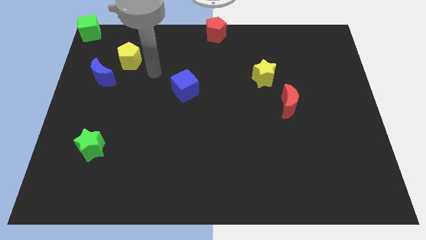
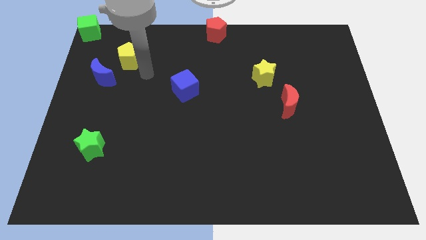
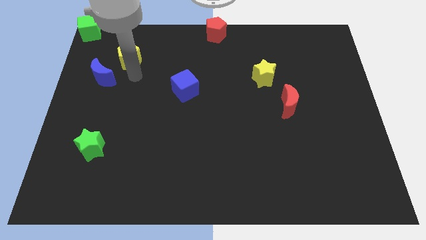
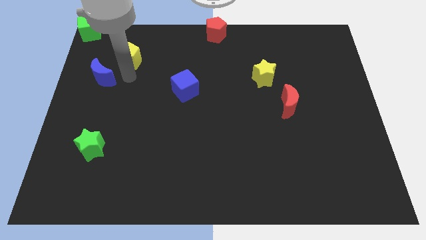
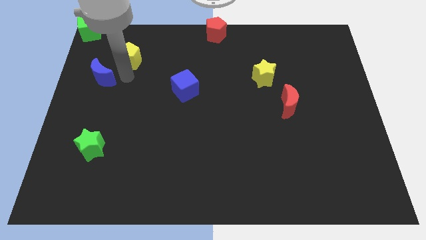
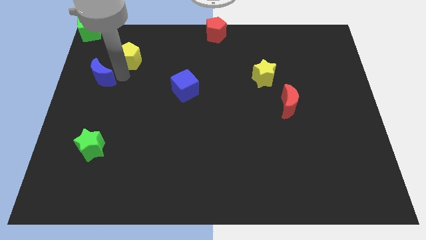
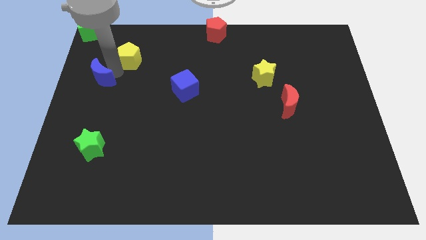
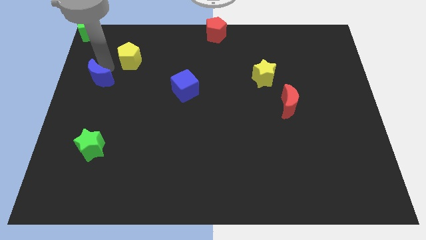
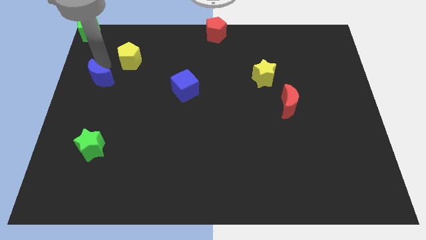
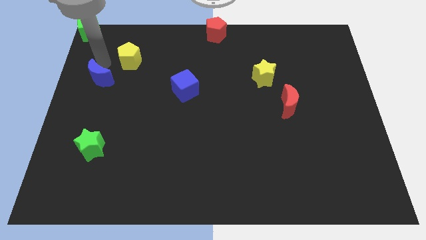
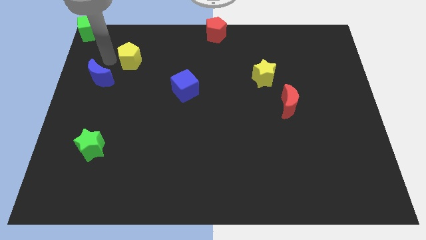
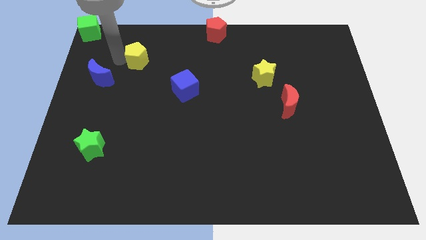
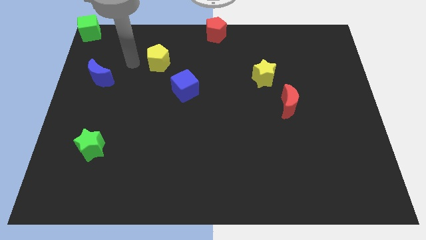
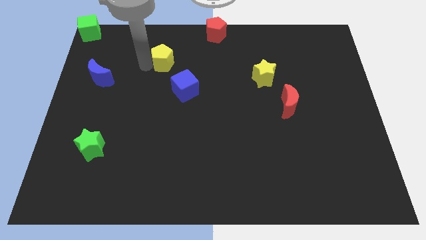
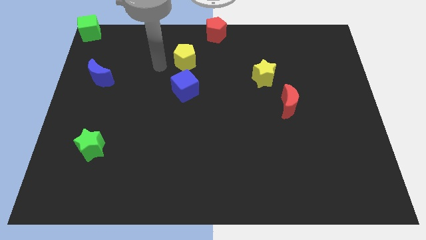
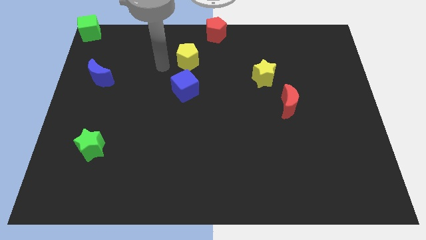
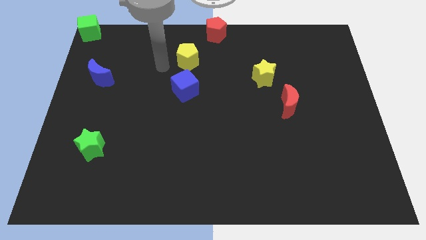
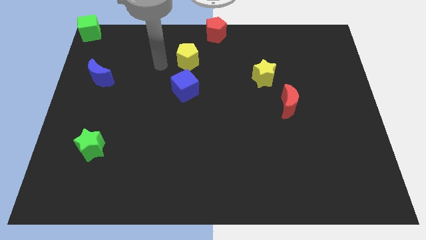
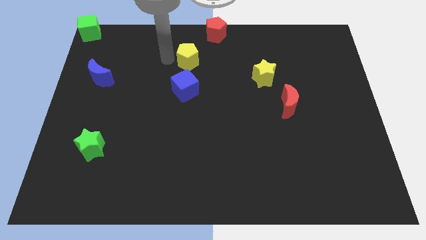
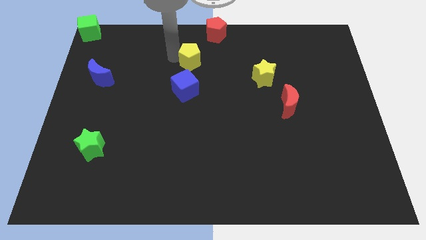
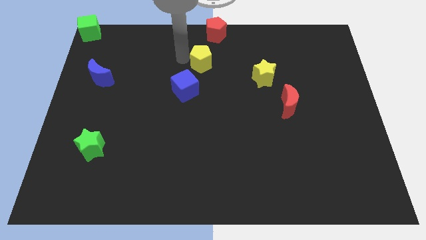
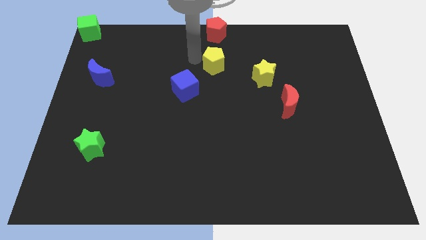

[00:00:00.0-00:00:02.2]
place the yellow pentagon in between the red pentagon and blue cube

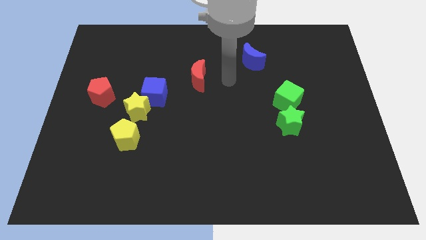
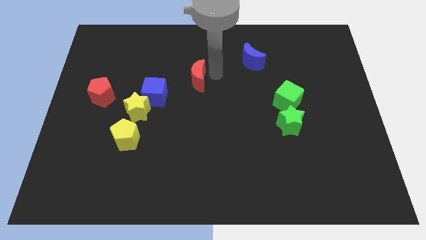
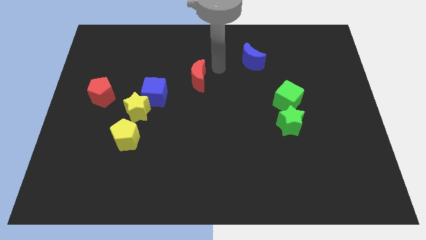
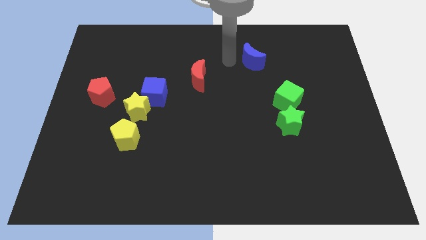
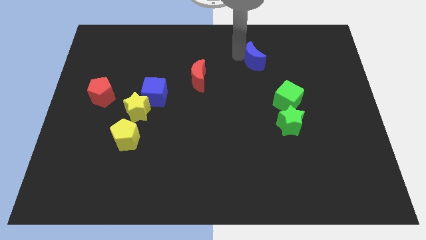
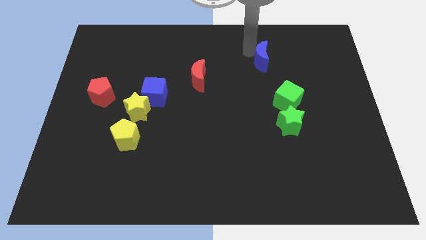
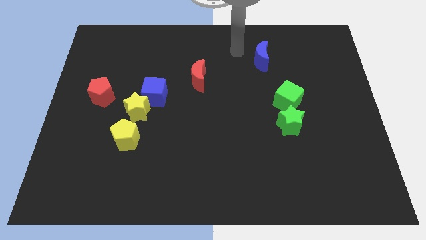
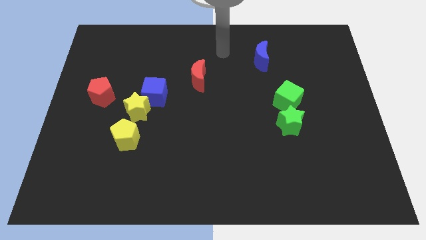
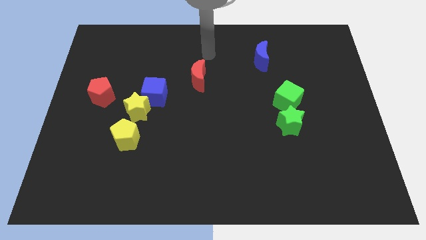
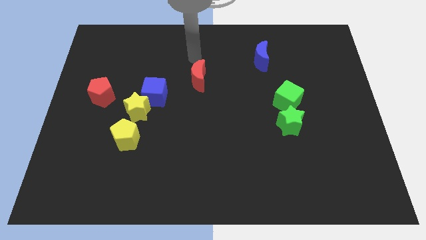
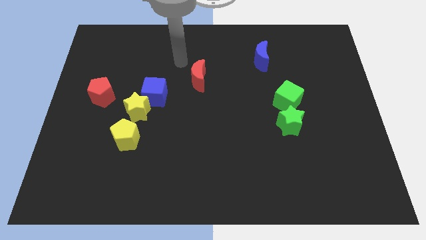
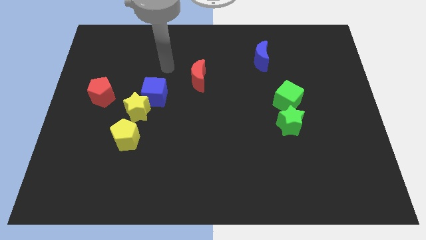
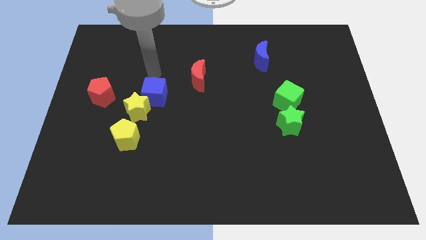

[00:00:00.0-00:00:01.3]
tap the blue crescent

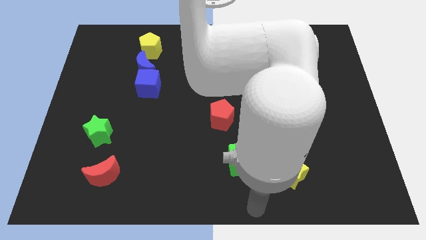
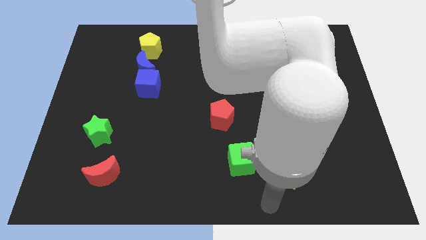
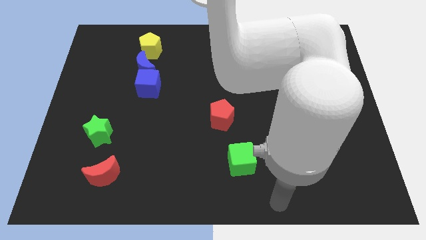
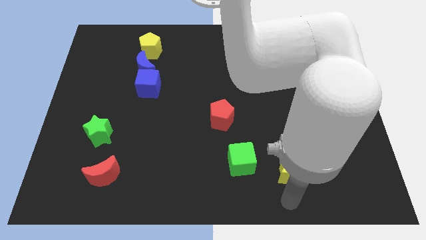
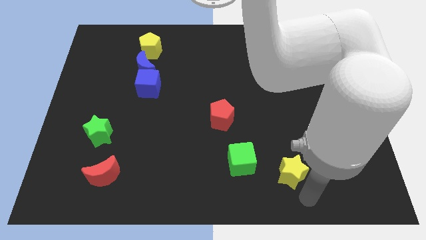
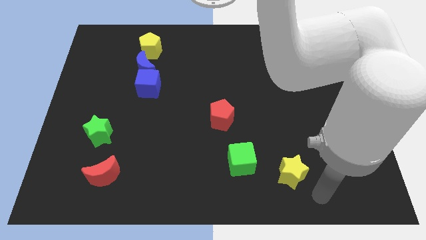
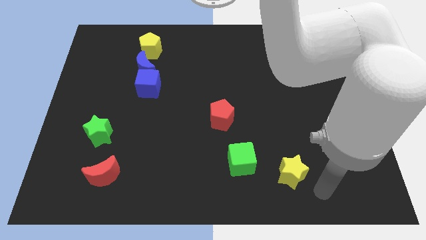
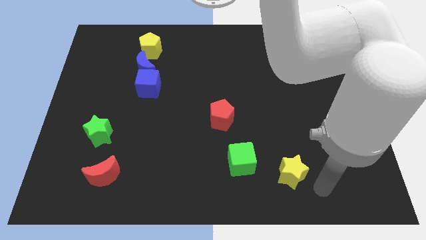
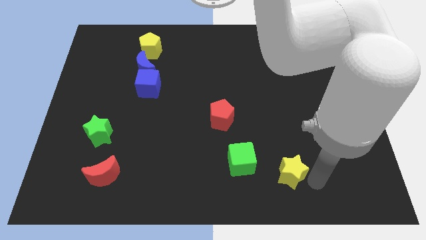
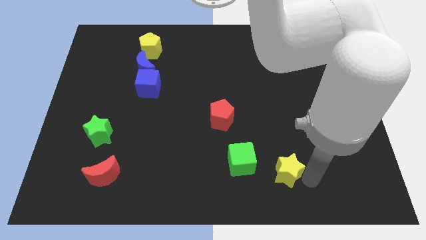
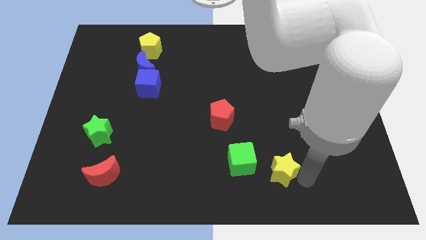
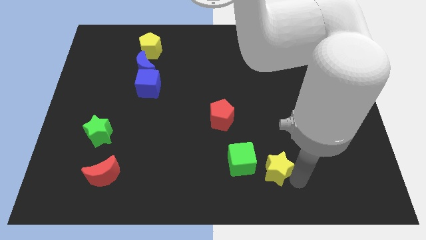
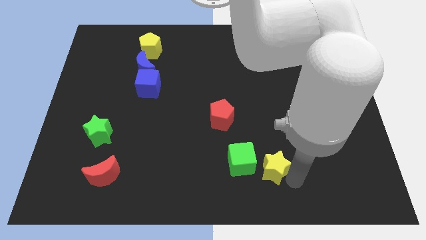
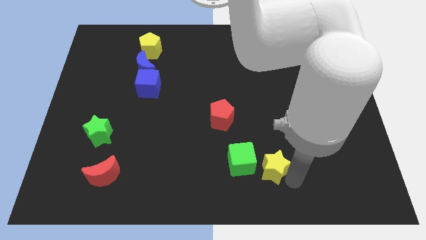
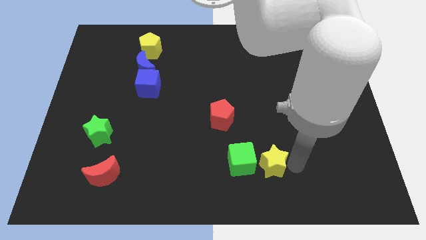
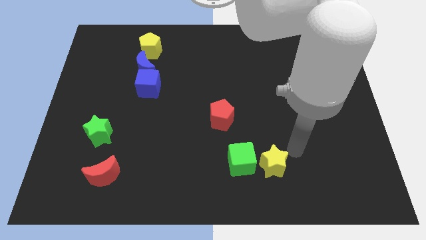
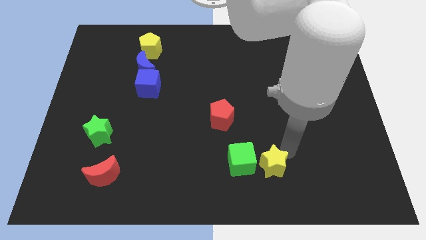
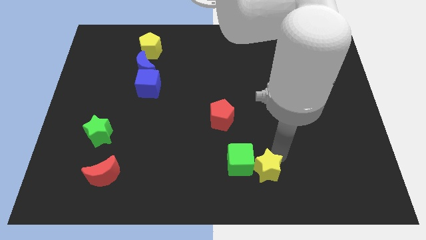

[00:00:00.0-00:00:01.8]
slightly push the yellow star

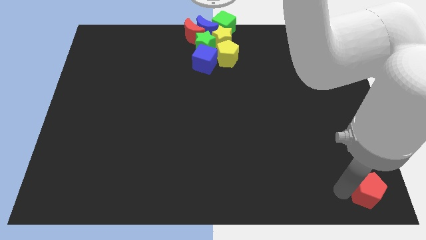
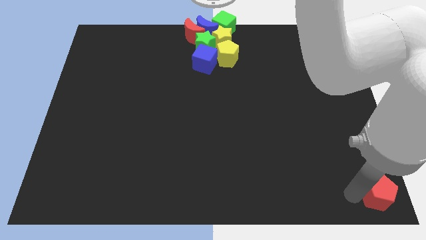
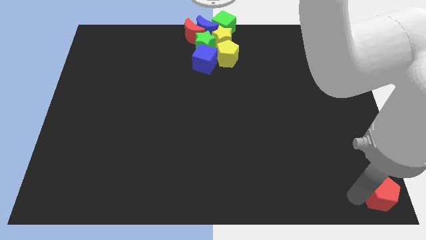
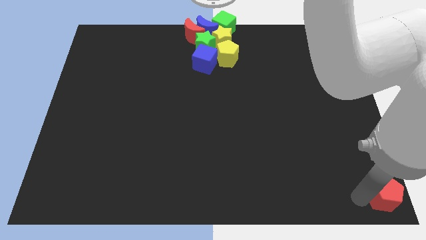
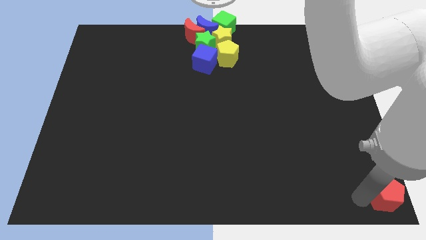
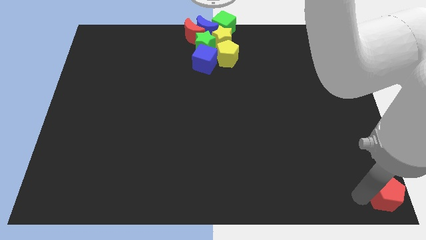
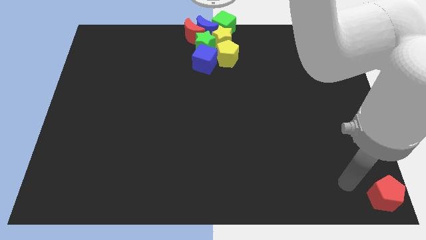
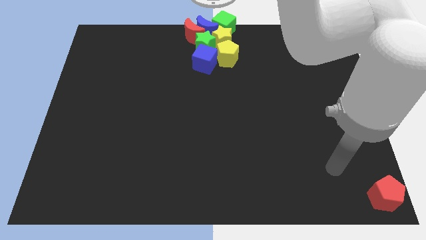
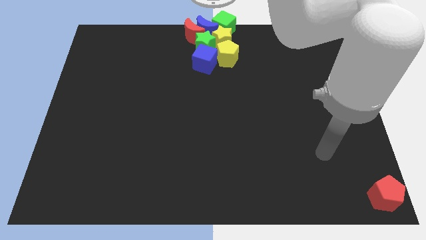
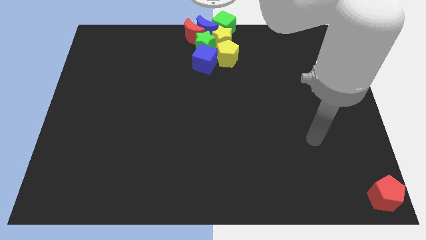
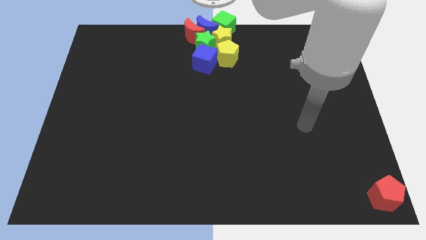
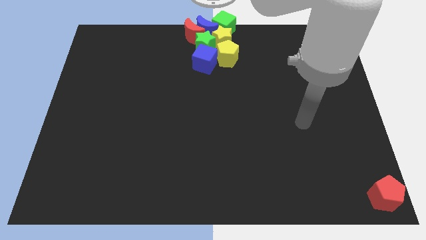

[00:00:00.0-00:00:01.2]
move your arm away from the red pentagon

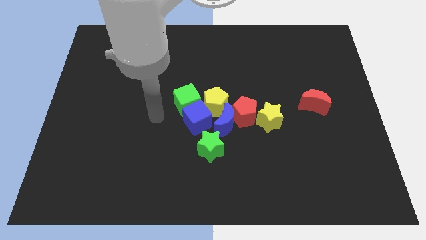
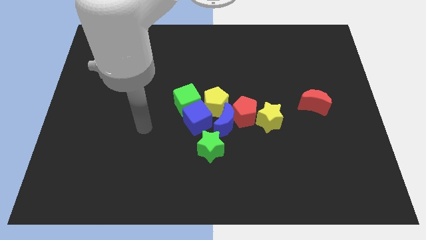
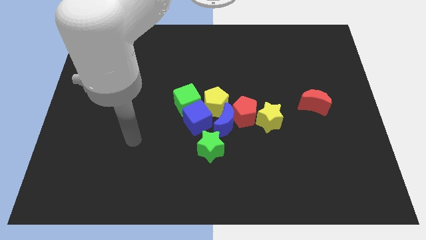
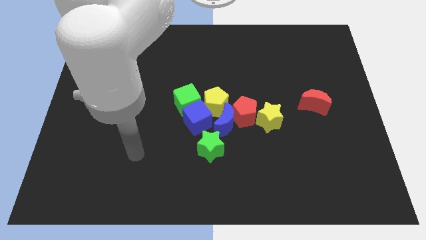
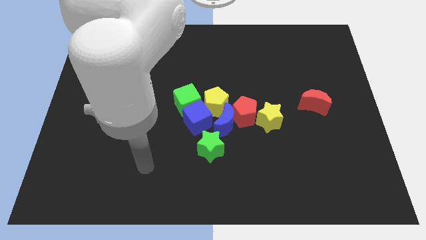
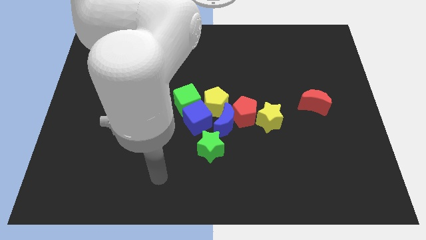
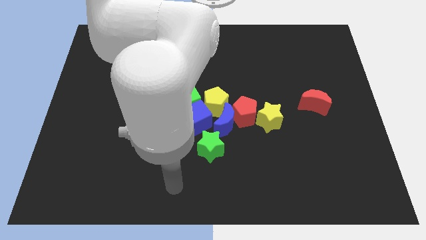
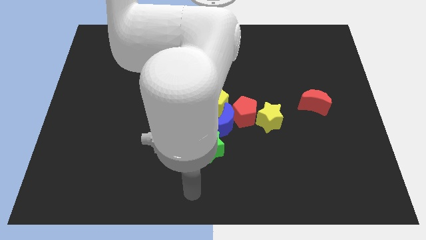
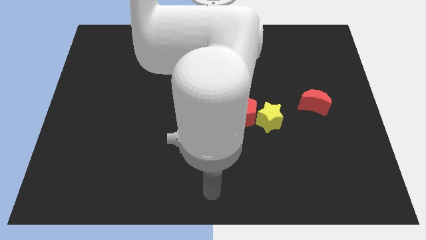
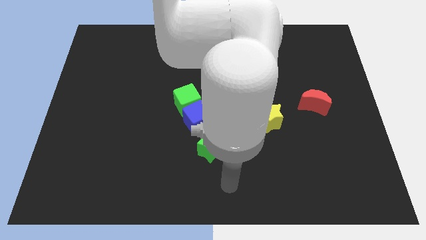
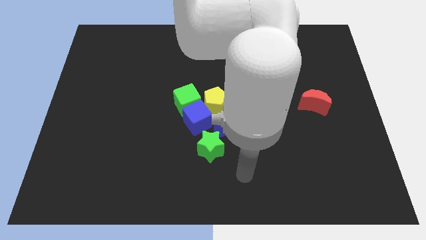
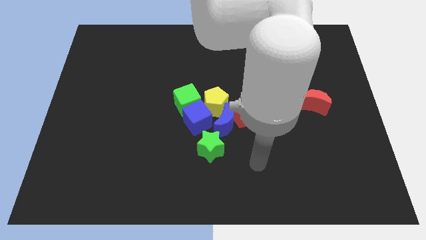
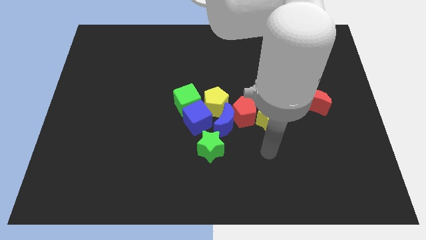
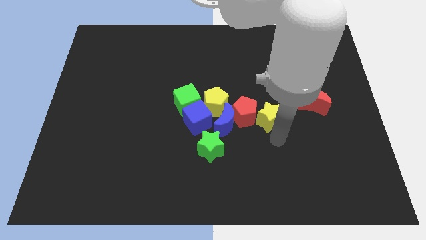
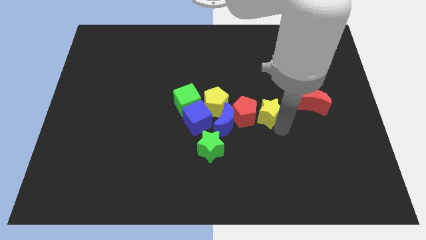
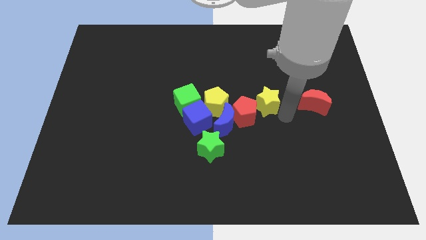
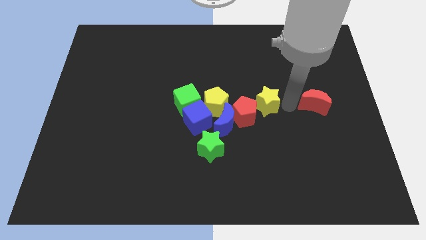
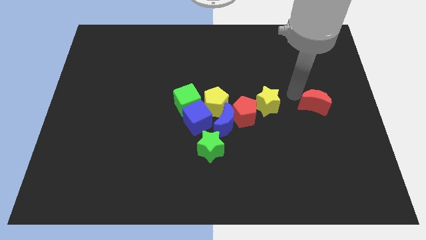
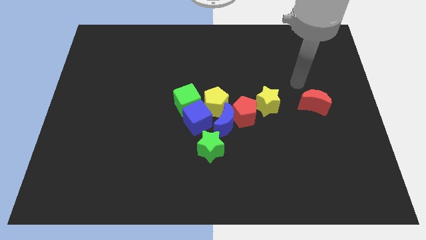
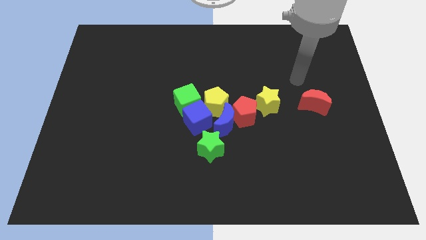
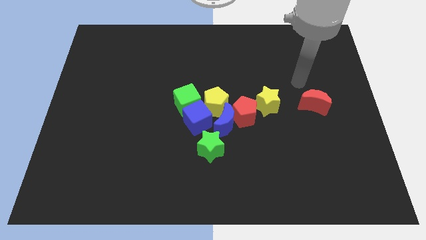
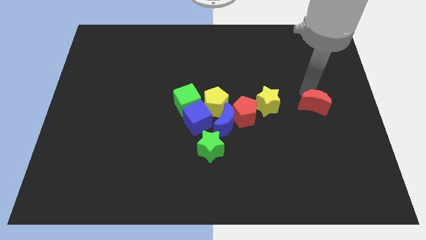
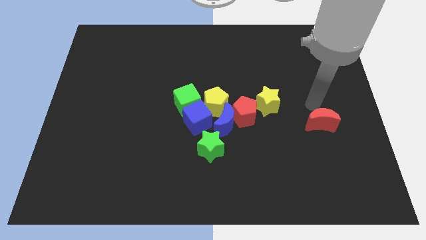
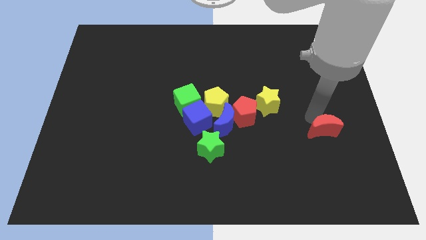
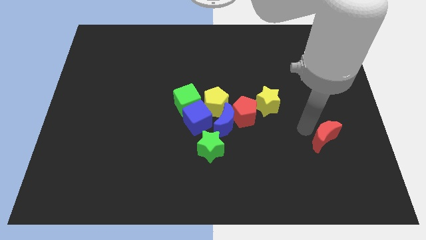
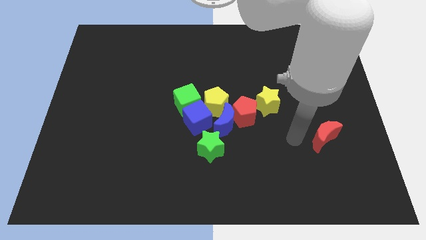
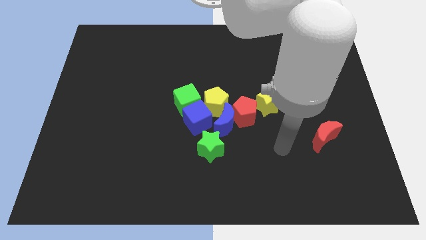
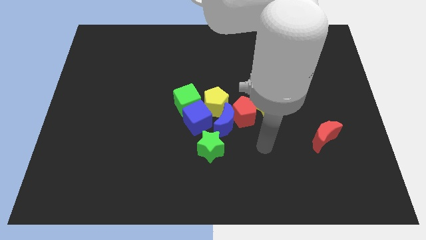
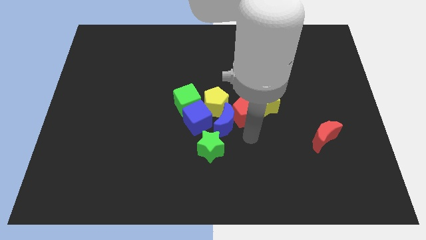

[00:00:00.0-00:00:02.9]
push the red crescent to the bottom right of the red pentagon
